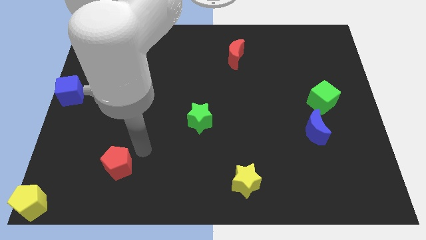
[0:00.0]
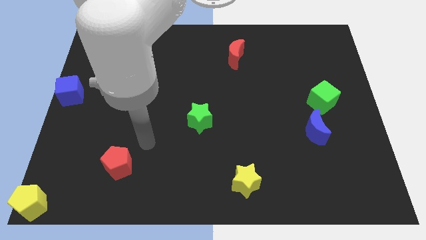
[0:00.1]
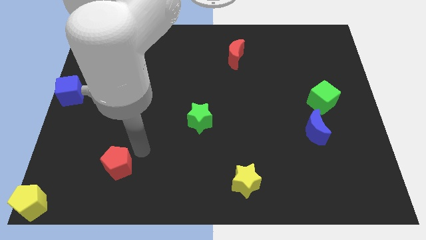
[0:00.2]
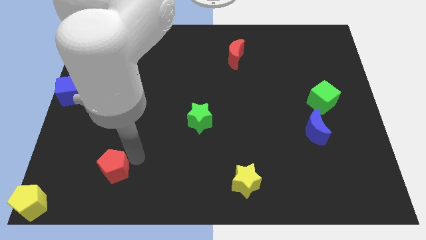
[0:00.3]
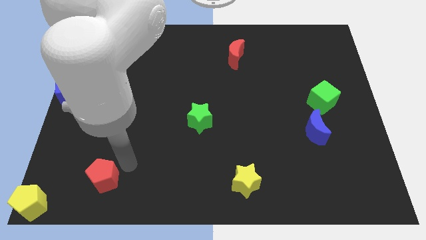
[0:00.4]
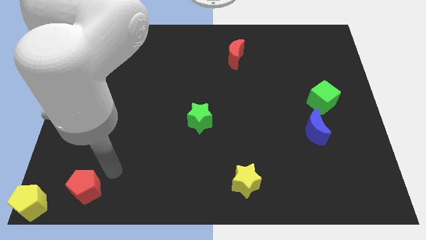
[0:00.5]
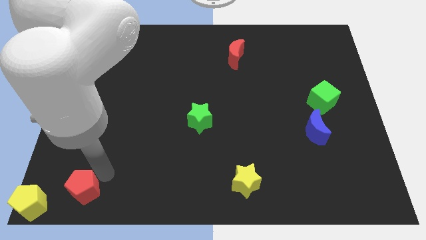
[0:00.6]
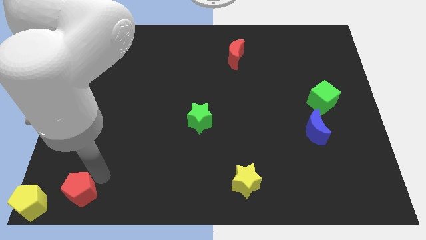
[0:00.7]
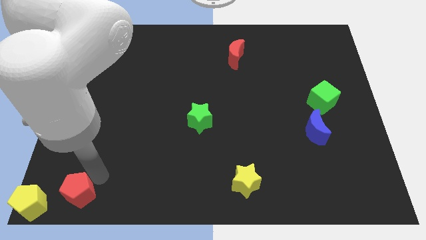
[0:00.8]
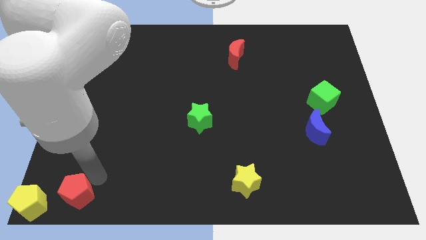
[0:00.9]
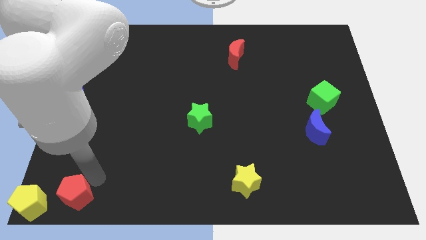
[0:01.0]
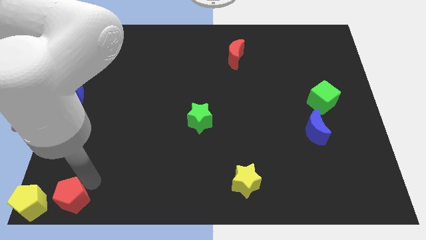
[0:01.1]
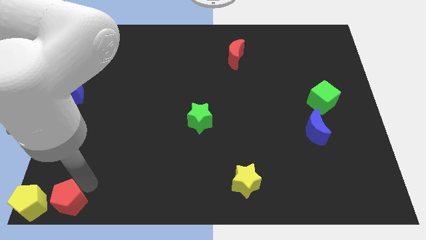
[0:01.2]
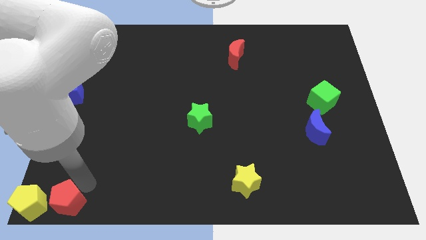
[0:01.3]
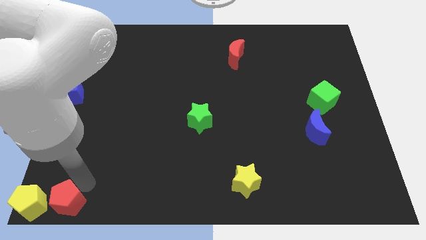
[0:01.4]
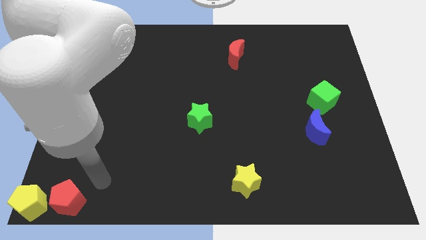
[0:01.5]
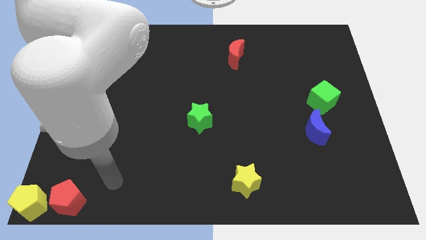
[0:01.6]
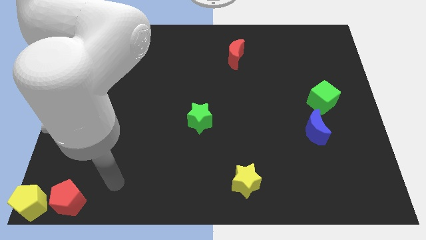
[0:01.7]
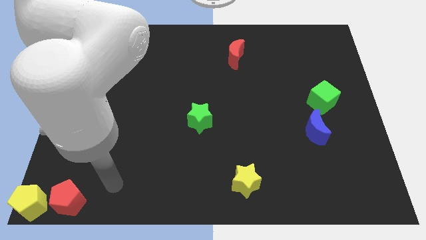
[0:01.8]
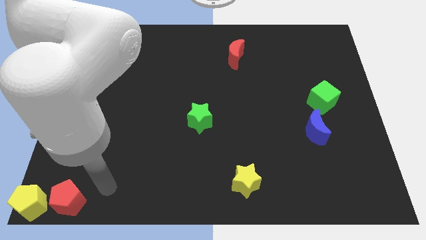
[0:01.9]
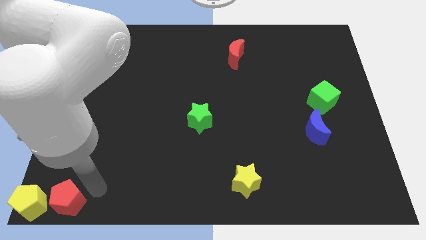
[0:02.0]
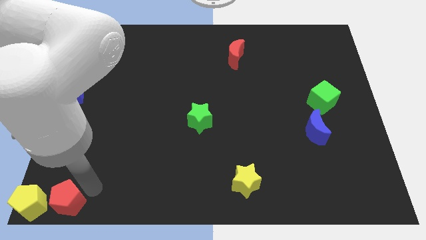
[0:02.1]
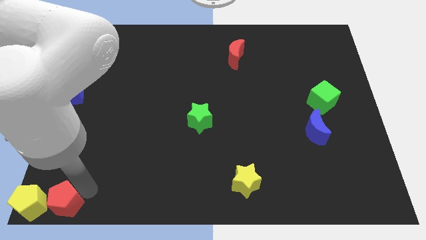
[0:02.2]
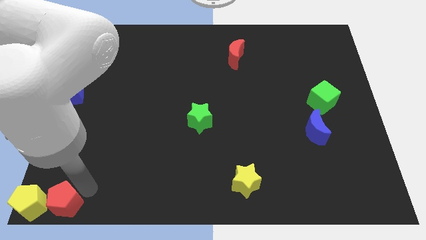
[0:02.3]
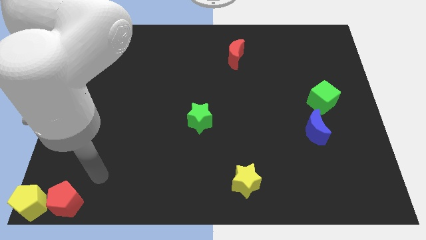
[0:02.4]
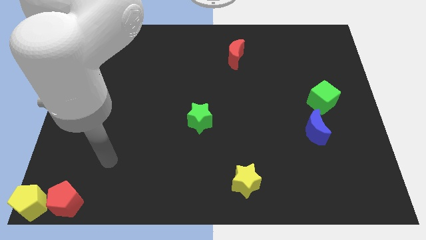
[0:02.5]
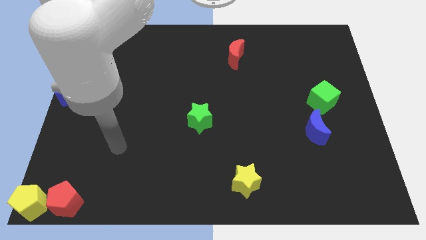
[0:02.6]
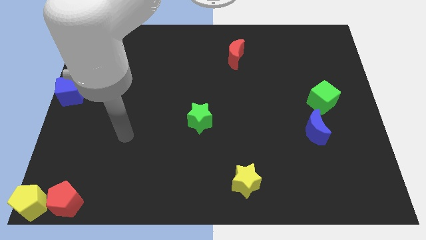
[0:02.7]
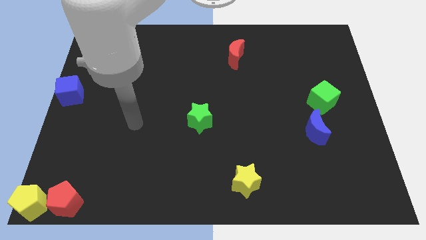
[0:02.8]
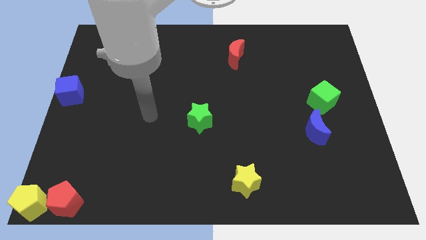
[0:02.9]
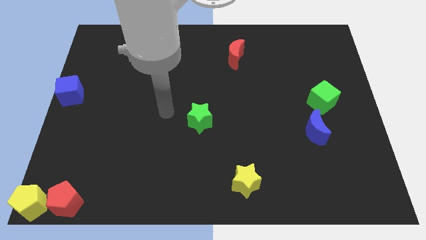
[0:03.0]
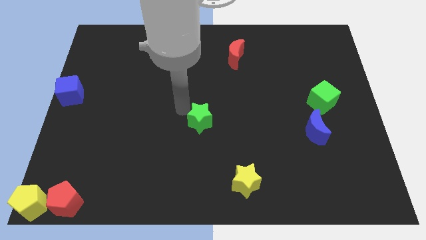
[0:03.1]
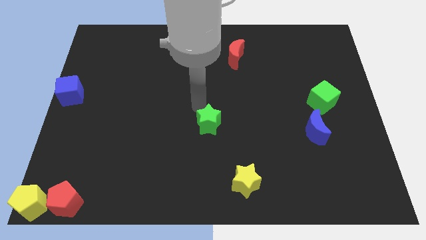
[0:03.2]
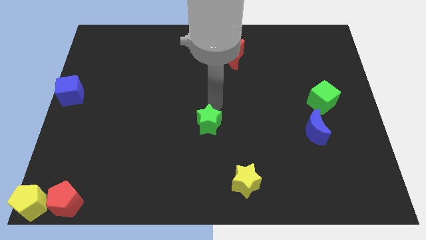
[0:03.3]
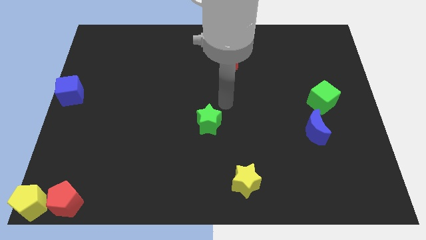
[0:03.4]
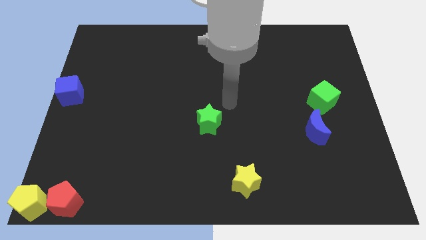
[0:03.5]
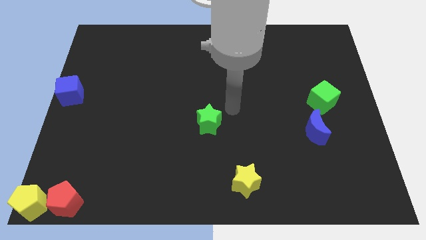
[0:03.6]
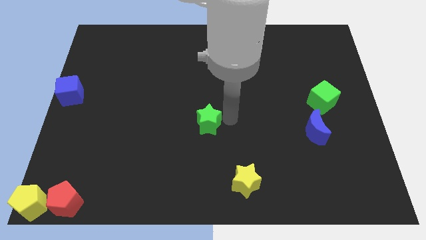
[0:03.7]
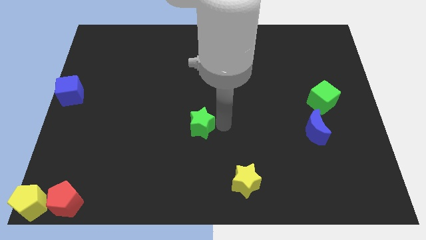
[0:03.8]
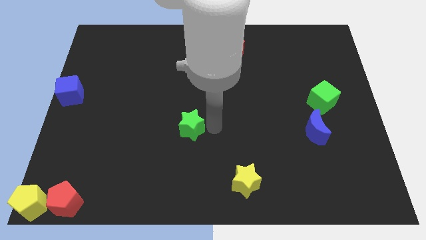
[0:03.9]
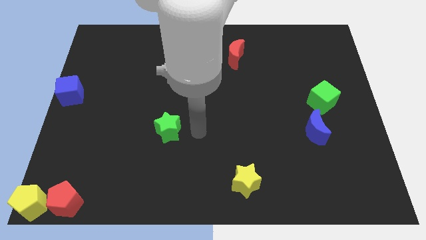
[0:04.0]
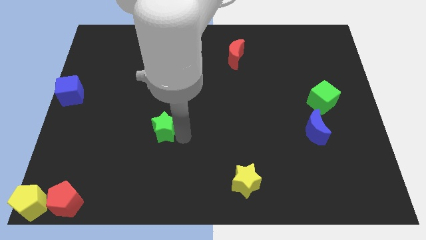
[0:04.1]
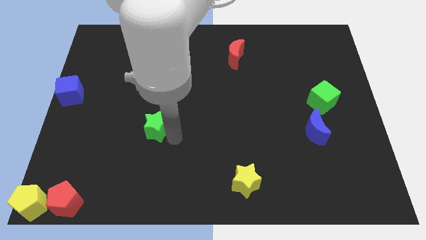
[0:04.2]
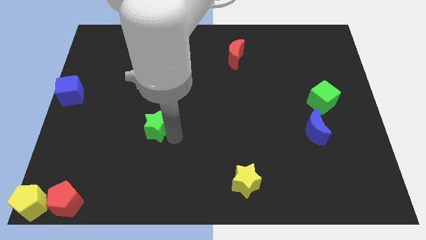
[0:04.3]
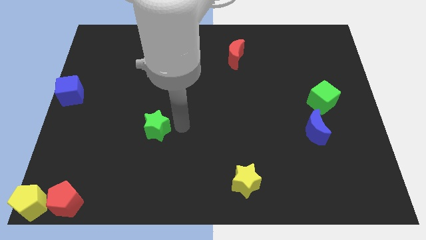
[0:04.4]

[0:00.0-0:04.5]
place the red pentagon right to the yellow pentagon

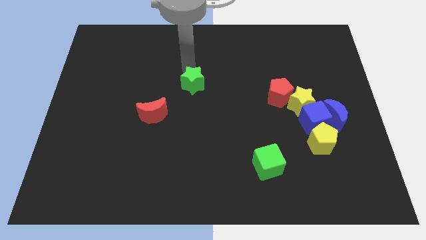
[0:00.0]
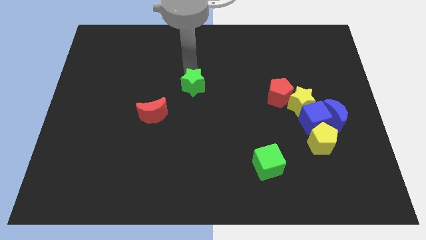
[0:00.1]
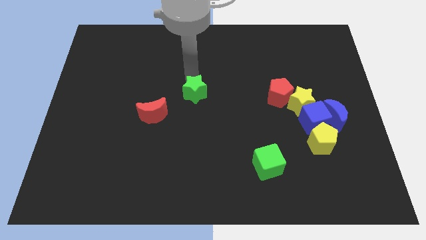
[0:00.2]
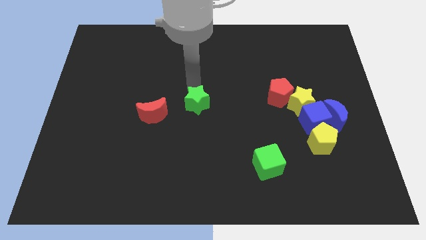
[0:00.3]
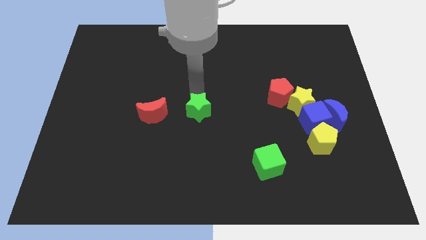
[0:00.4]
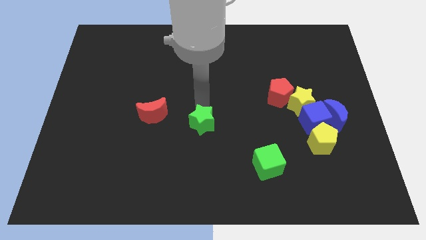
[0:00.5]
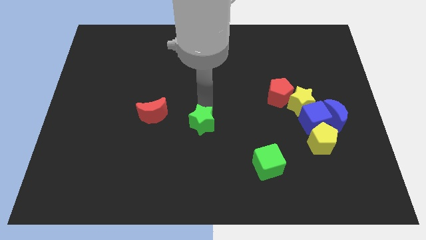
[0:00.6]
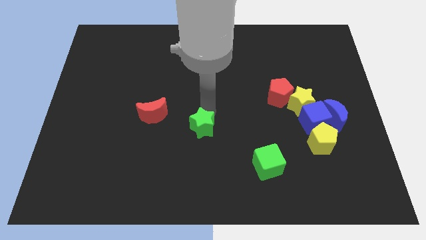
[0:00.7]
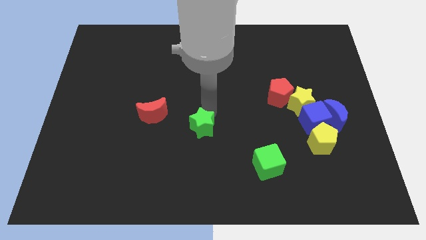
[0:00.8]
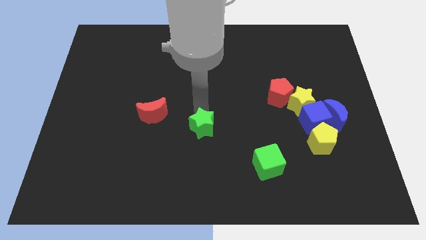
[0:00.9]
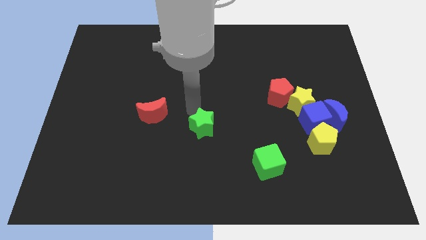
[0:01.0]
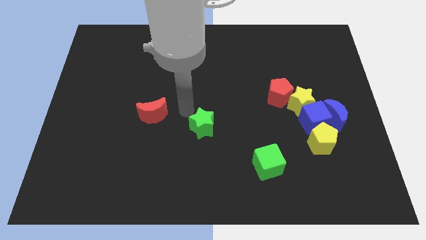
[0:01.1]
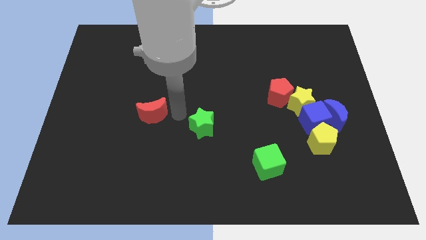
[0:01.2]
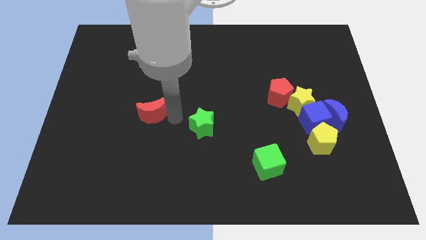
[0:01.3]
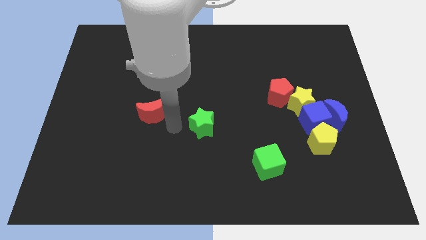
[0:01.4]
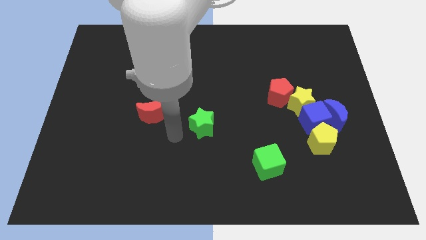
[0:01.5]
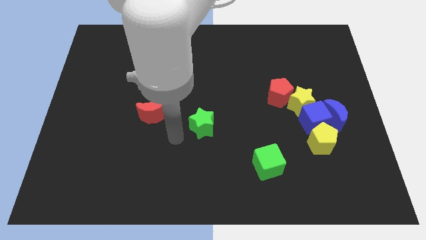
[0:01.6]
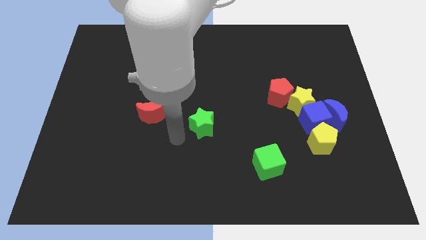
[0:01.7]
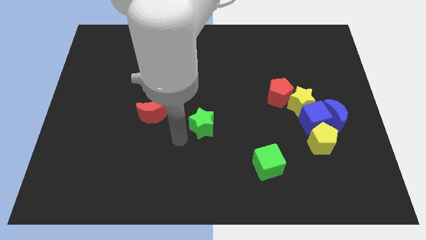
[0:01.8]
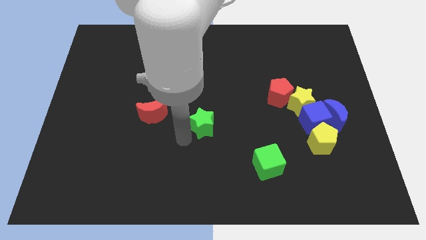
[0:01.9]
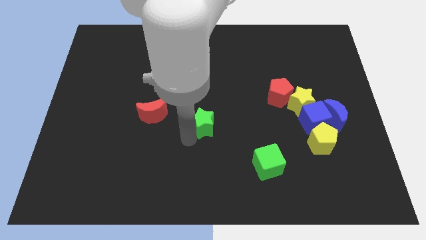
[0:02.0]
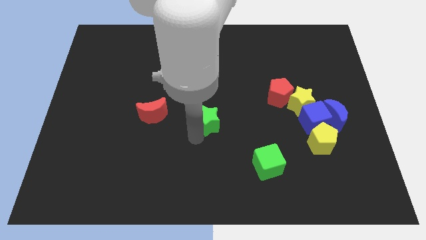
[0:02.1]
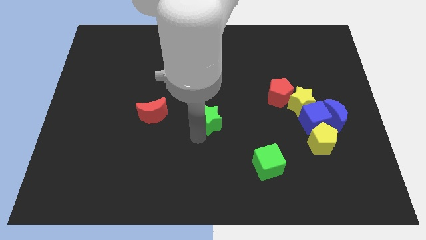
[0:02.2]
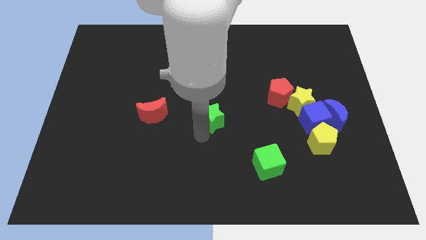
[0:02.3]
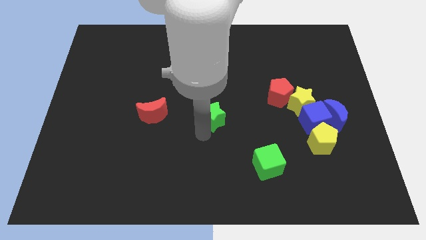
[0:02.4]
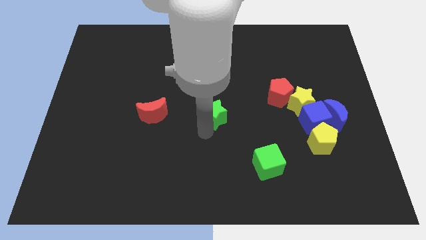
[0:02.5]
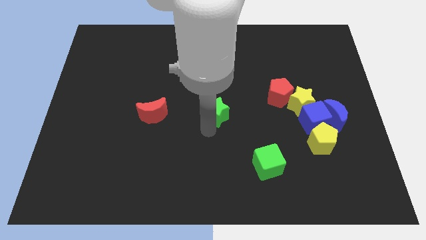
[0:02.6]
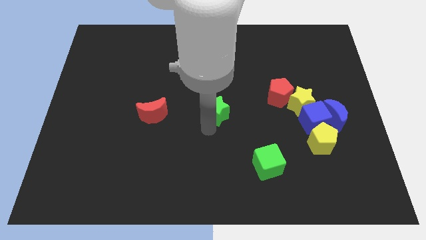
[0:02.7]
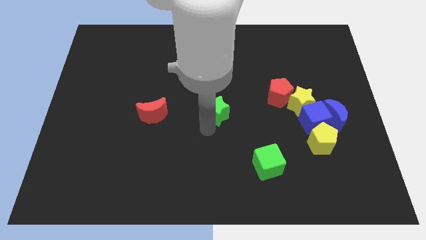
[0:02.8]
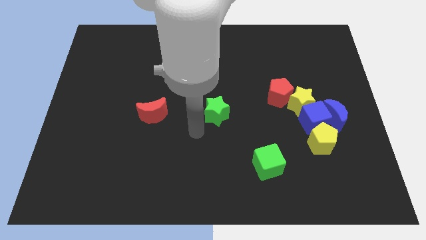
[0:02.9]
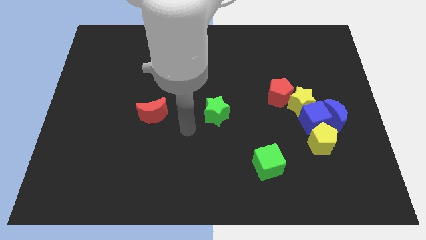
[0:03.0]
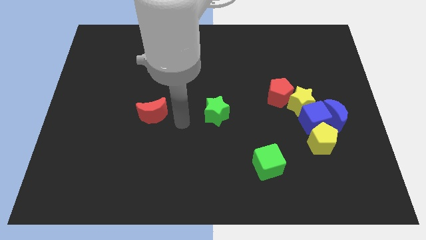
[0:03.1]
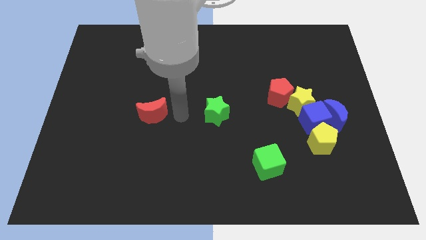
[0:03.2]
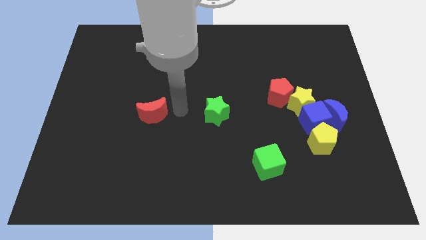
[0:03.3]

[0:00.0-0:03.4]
place the green star at the center of the board

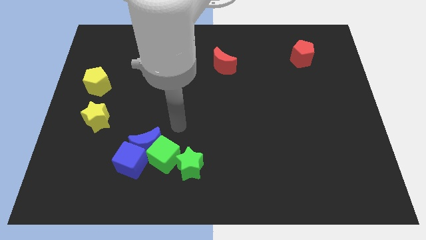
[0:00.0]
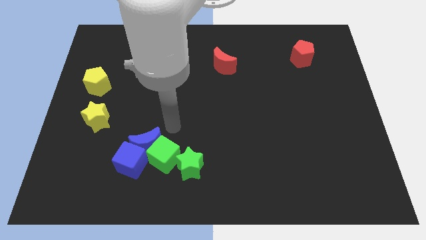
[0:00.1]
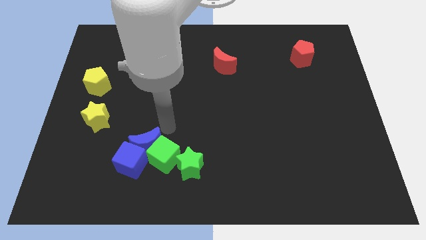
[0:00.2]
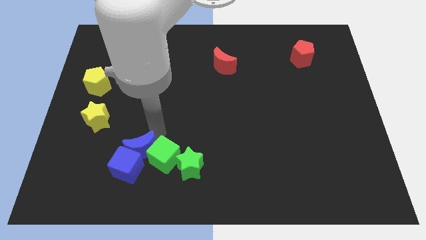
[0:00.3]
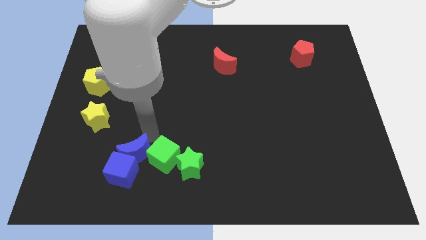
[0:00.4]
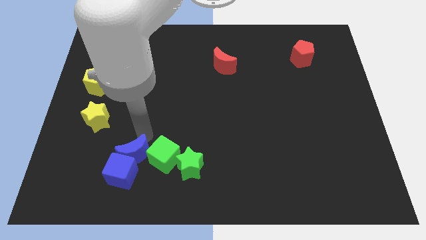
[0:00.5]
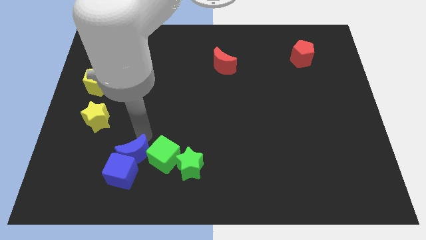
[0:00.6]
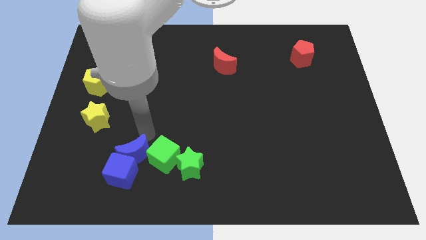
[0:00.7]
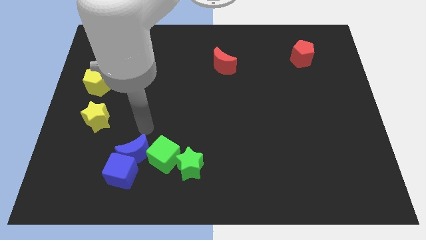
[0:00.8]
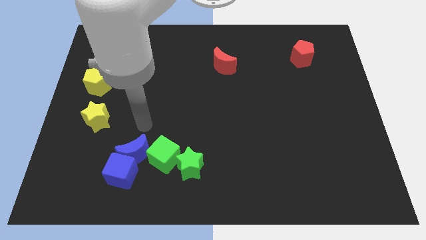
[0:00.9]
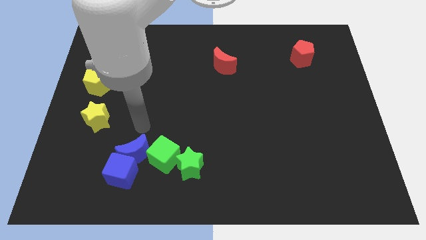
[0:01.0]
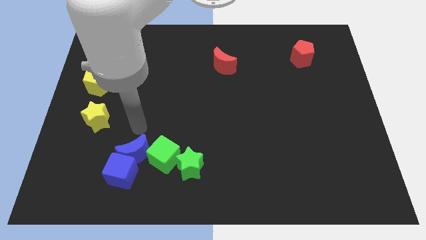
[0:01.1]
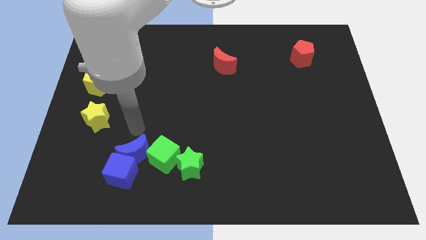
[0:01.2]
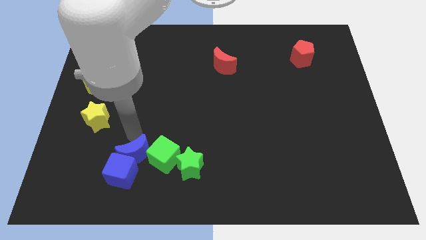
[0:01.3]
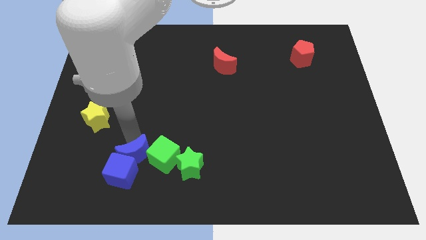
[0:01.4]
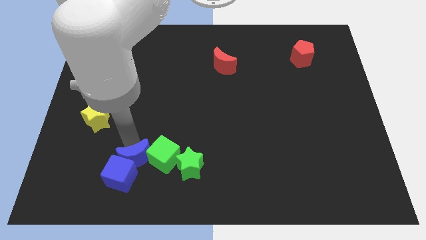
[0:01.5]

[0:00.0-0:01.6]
move blue blocks to the bottom
